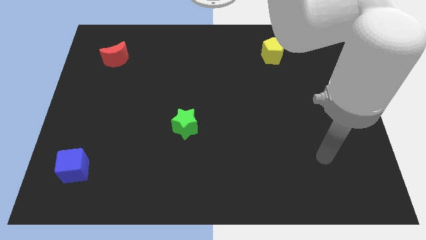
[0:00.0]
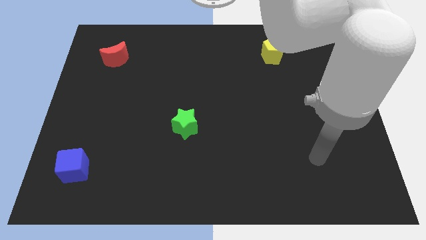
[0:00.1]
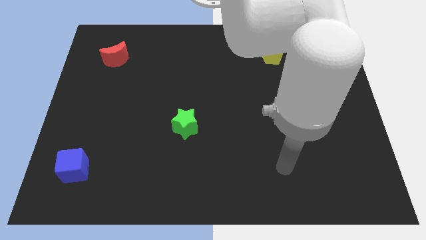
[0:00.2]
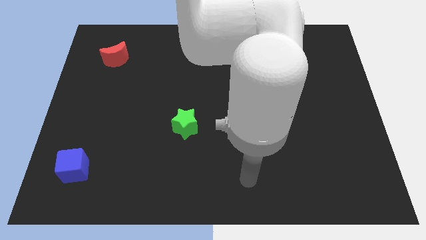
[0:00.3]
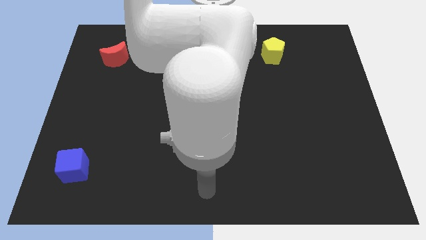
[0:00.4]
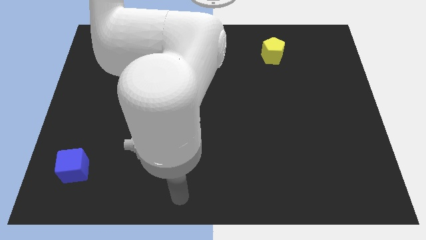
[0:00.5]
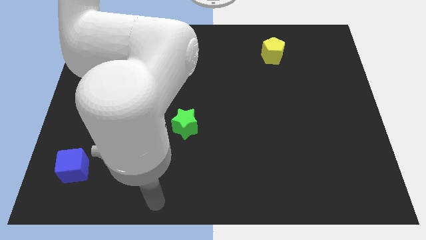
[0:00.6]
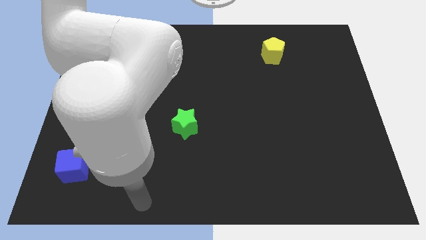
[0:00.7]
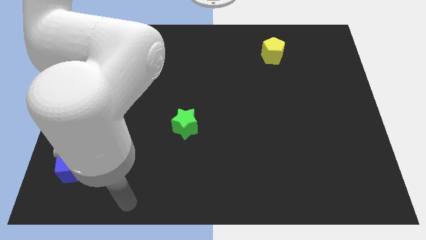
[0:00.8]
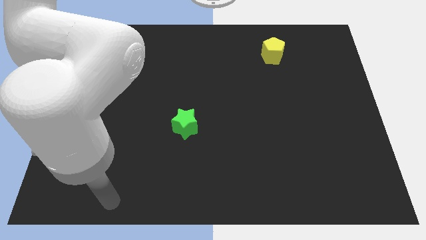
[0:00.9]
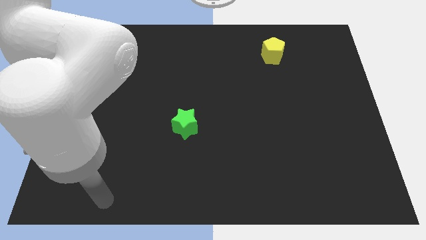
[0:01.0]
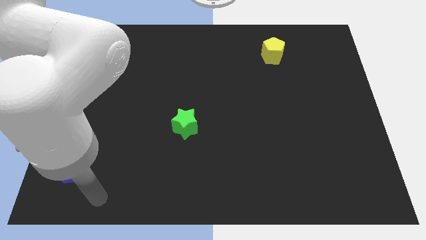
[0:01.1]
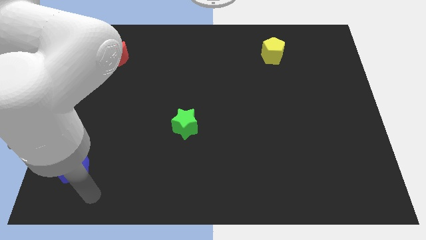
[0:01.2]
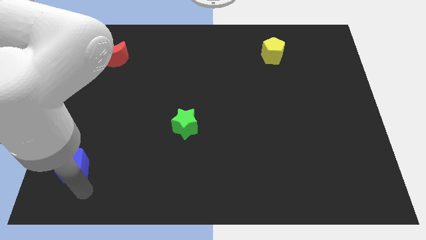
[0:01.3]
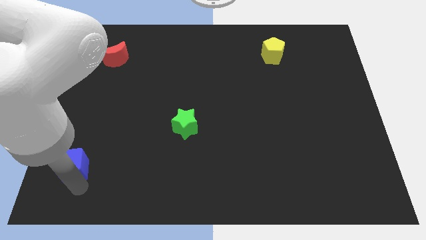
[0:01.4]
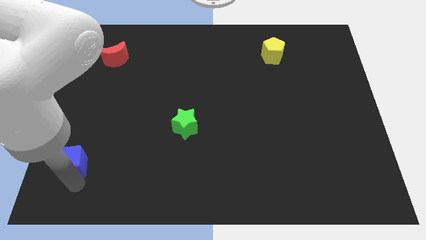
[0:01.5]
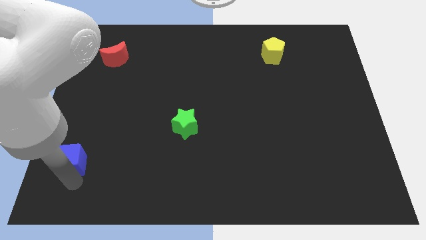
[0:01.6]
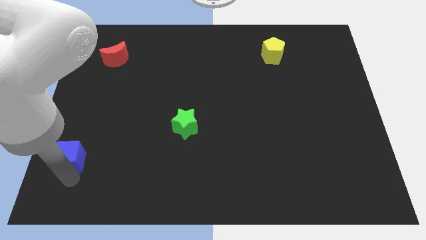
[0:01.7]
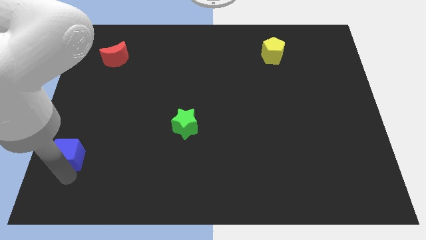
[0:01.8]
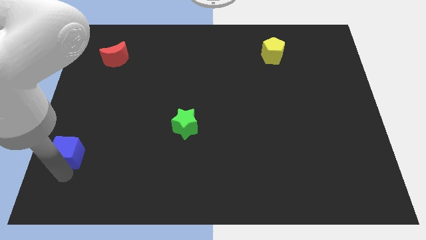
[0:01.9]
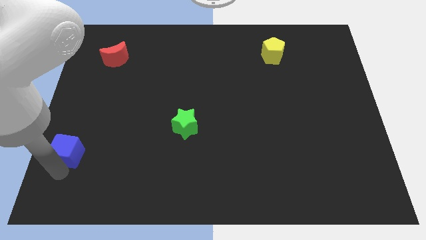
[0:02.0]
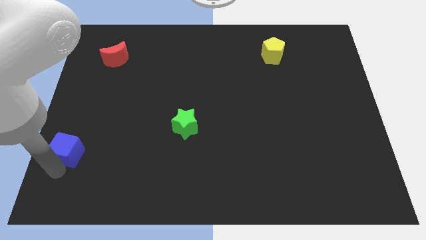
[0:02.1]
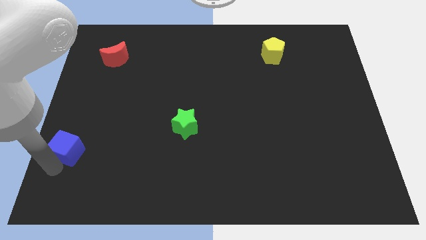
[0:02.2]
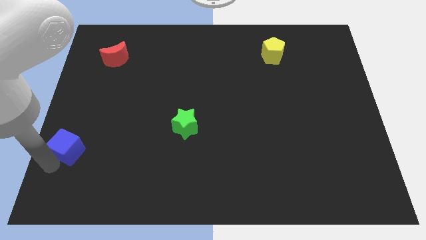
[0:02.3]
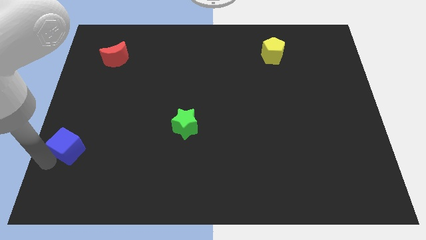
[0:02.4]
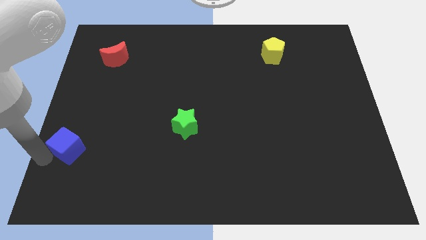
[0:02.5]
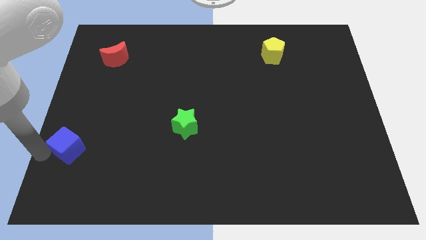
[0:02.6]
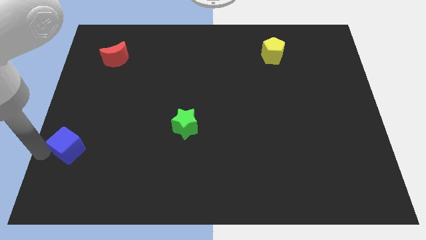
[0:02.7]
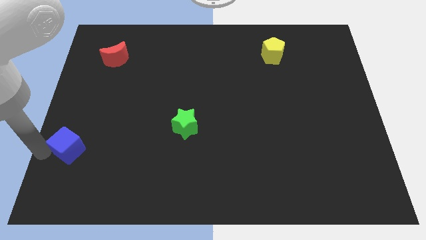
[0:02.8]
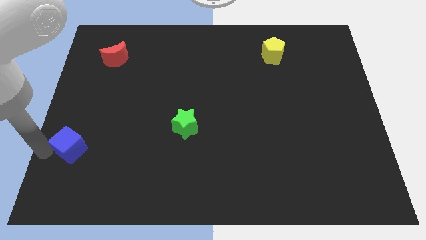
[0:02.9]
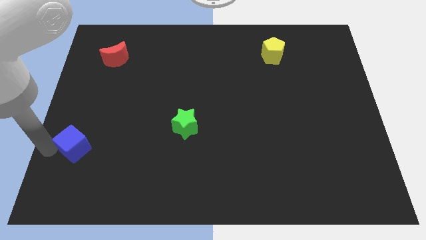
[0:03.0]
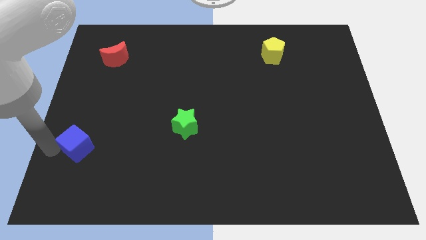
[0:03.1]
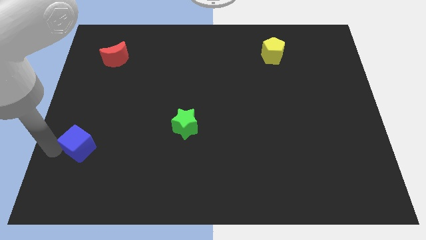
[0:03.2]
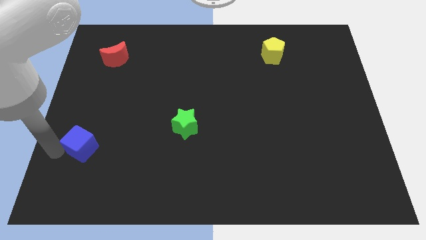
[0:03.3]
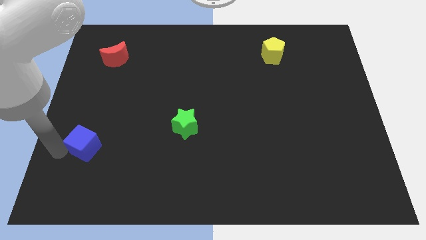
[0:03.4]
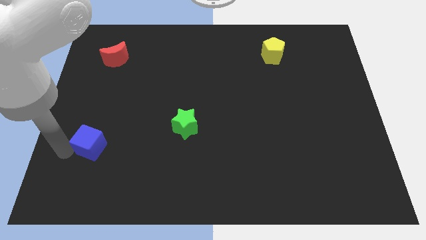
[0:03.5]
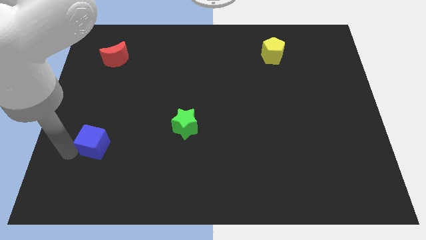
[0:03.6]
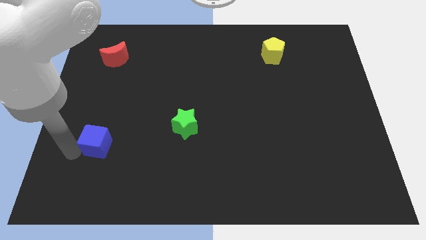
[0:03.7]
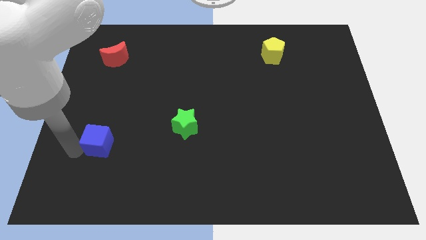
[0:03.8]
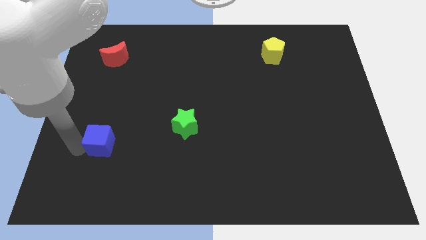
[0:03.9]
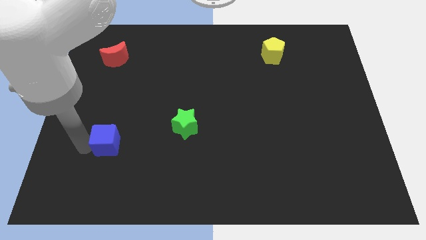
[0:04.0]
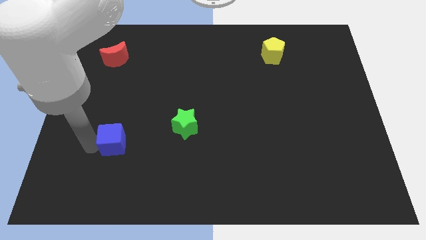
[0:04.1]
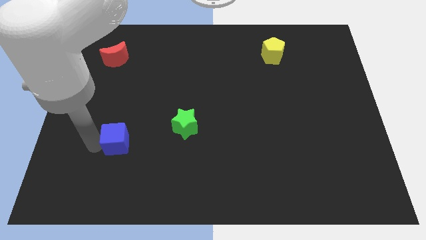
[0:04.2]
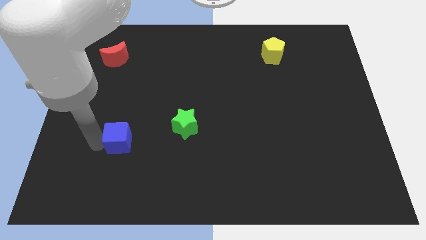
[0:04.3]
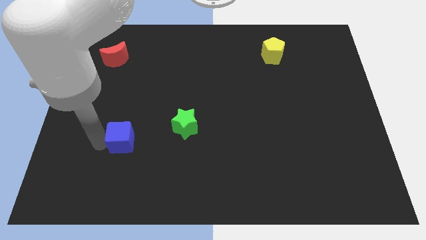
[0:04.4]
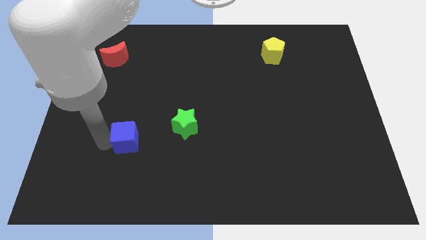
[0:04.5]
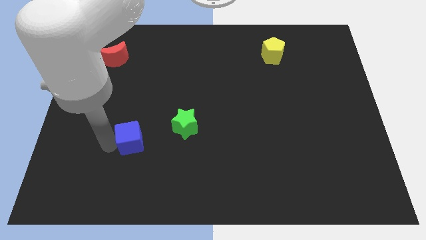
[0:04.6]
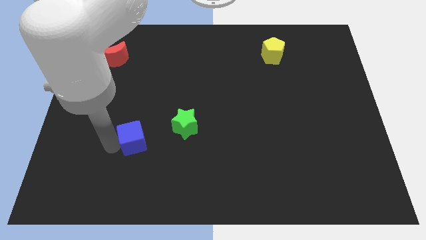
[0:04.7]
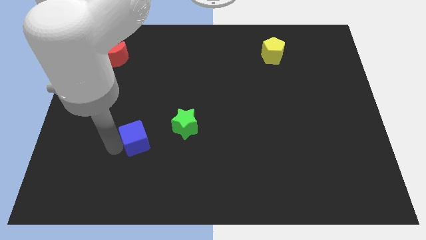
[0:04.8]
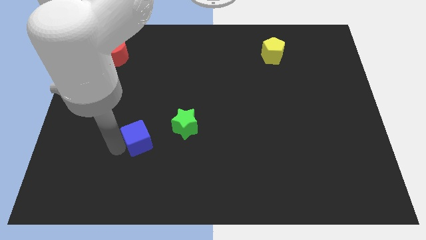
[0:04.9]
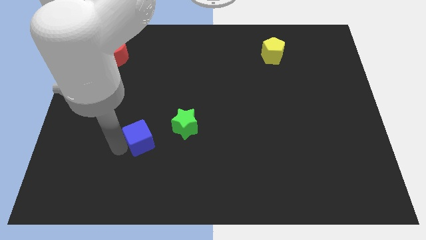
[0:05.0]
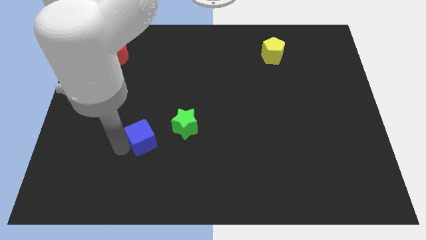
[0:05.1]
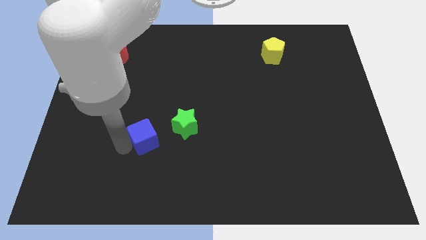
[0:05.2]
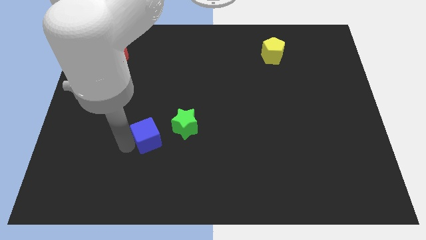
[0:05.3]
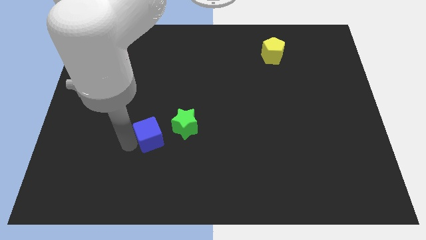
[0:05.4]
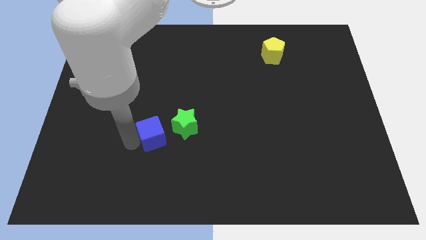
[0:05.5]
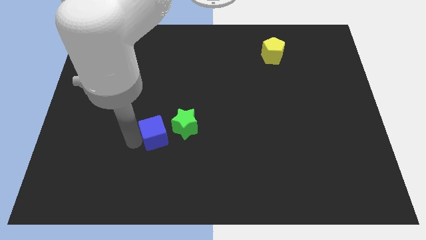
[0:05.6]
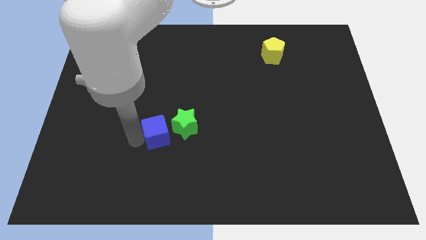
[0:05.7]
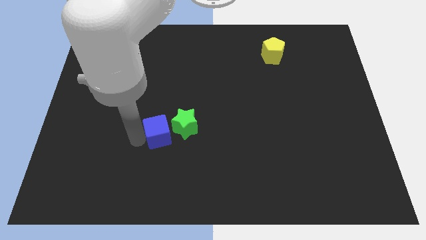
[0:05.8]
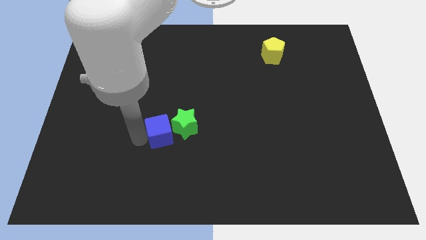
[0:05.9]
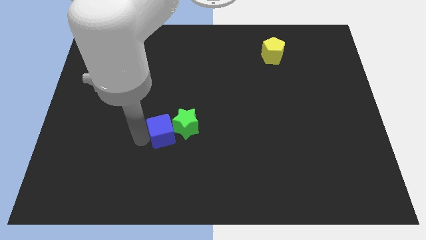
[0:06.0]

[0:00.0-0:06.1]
put the blue cube towards the green block

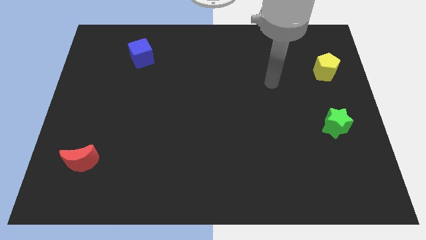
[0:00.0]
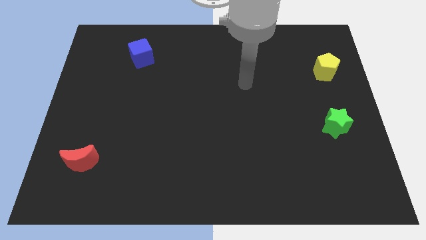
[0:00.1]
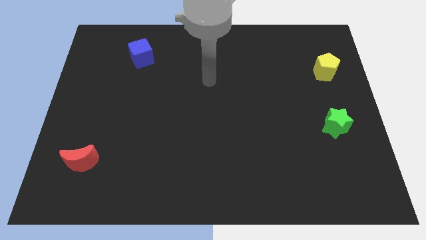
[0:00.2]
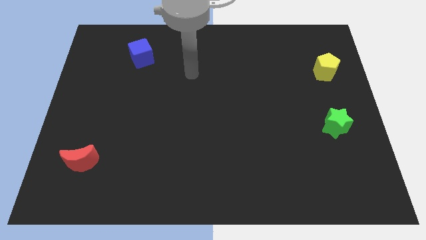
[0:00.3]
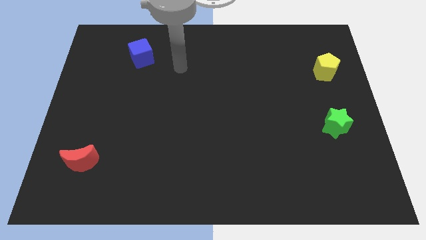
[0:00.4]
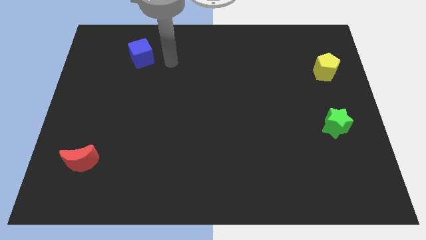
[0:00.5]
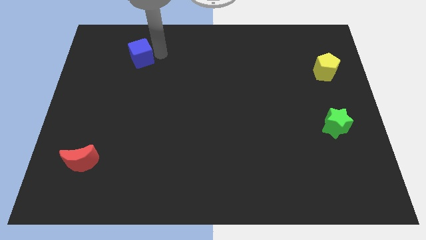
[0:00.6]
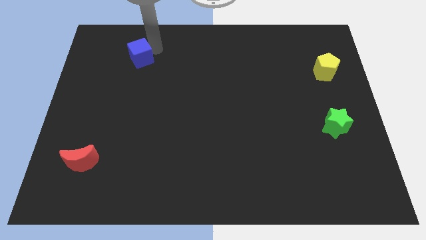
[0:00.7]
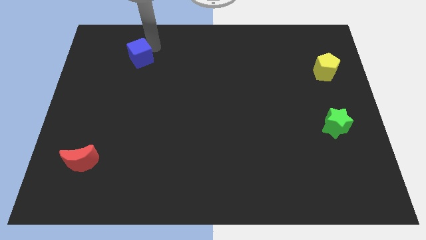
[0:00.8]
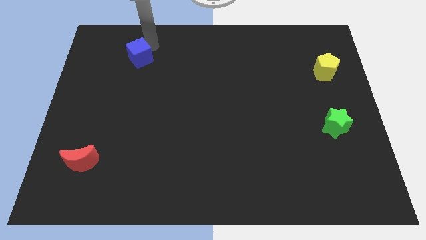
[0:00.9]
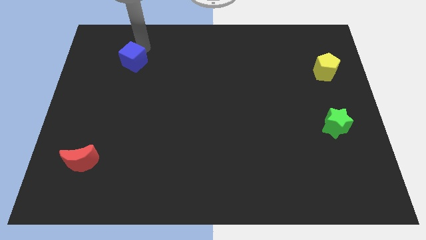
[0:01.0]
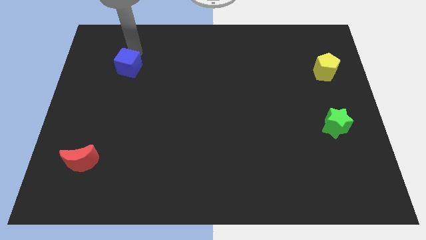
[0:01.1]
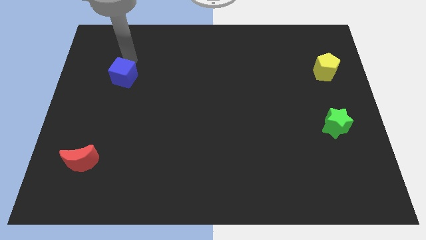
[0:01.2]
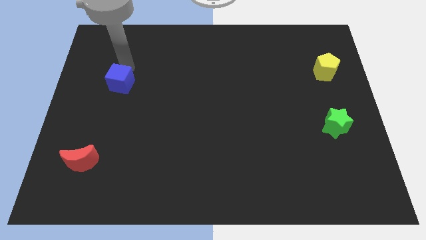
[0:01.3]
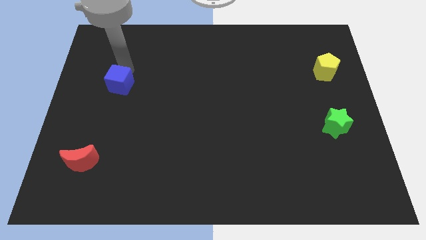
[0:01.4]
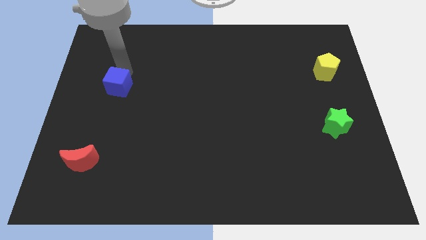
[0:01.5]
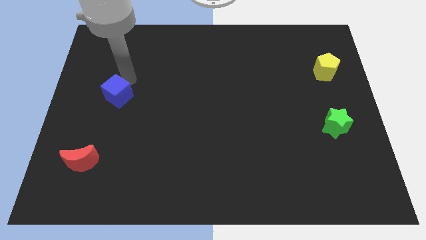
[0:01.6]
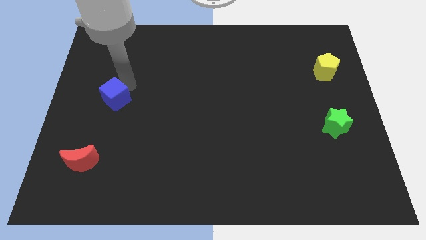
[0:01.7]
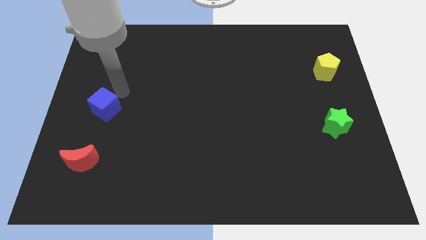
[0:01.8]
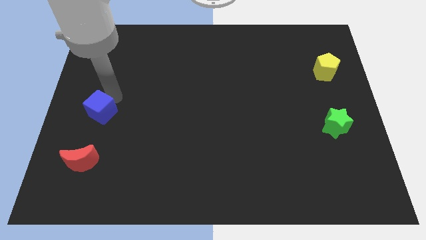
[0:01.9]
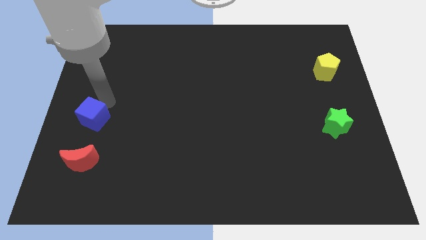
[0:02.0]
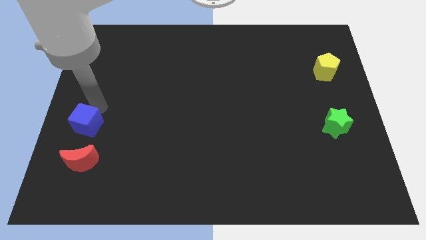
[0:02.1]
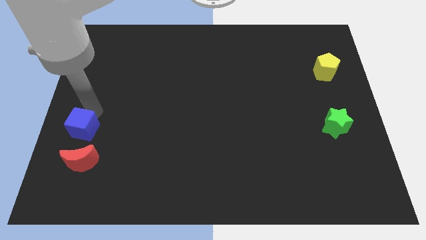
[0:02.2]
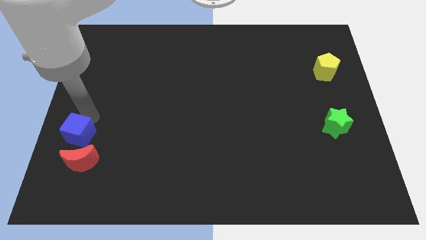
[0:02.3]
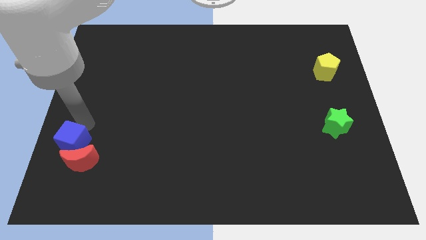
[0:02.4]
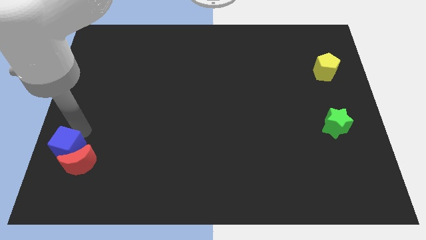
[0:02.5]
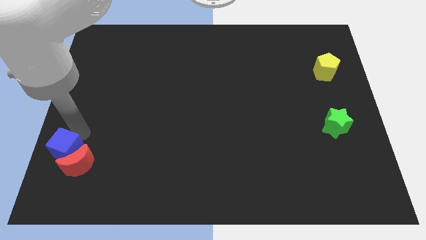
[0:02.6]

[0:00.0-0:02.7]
push the blue block next to the moon
